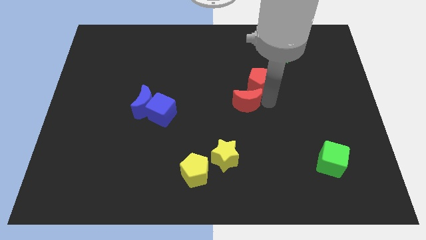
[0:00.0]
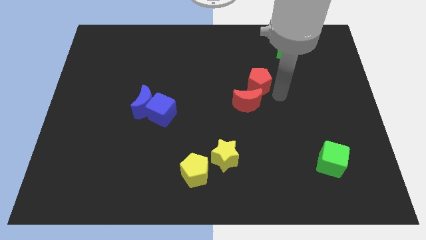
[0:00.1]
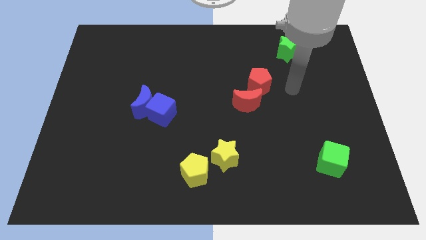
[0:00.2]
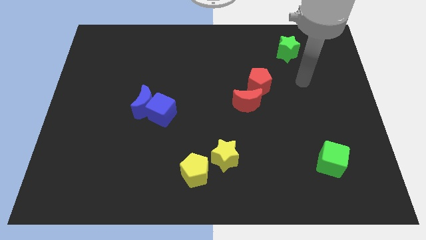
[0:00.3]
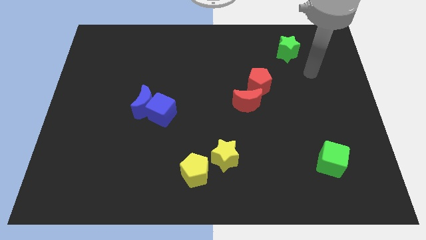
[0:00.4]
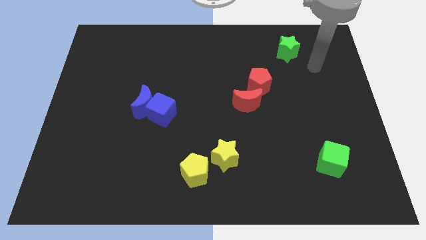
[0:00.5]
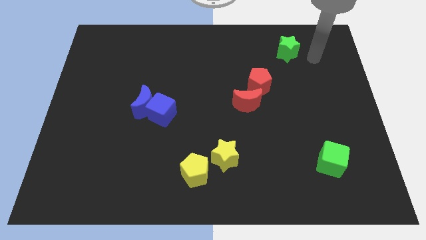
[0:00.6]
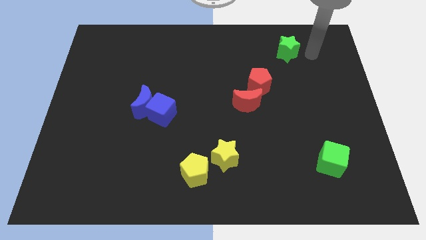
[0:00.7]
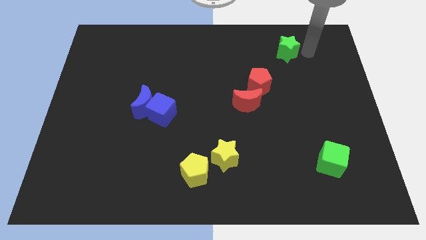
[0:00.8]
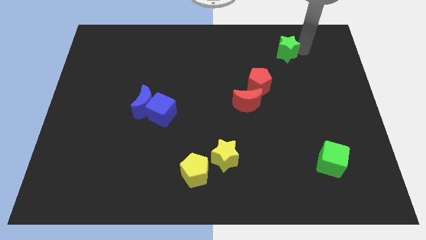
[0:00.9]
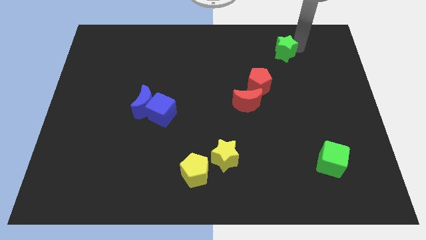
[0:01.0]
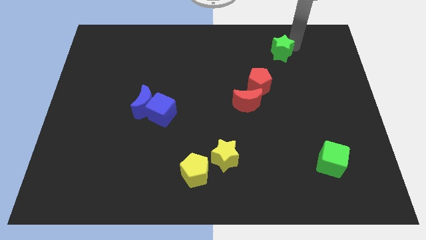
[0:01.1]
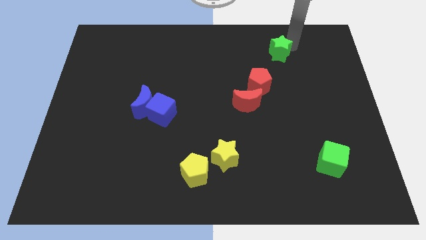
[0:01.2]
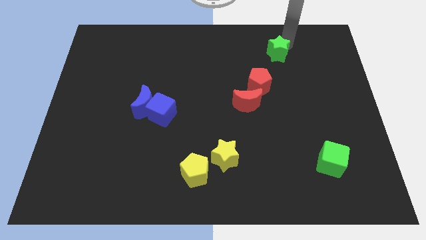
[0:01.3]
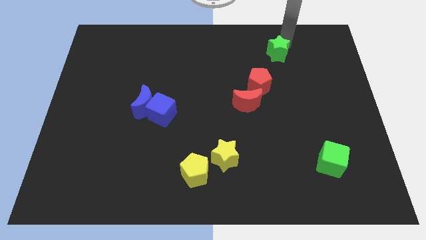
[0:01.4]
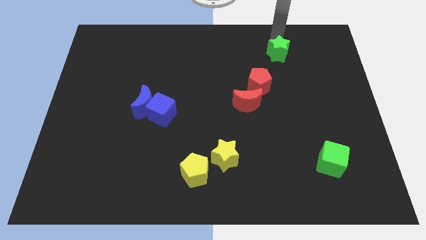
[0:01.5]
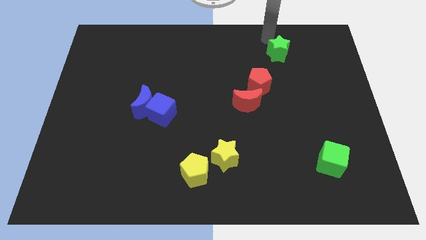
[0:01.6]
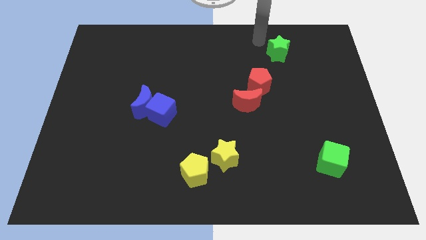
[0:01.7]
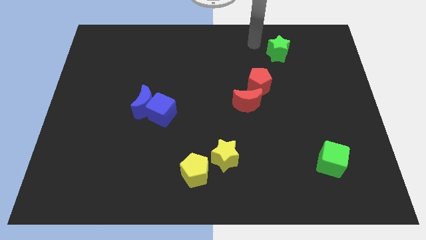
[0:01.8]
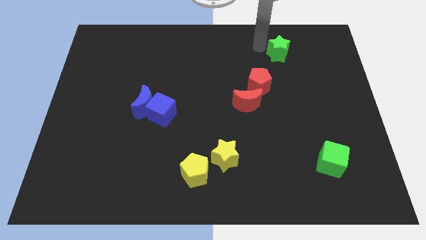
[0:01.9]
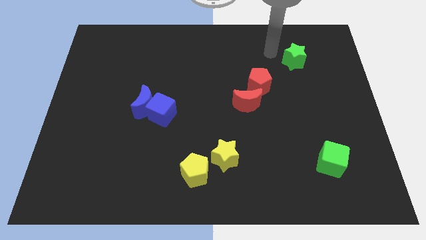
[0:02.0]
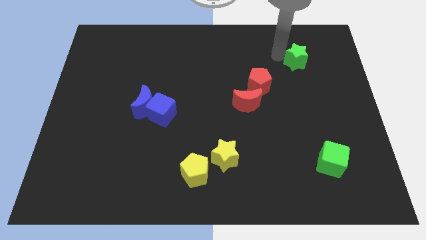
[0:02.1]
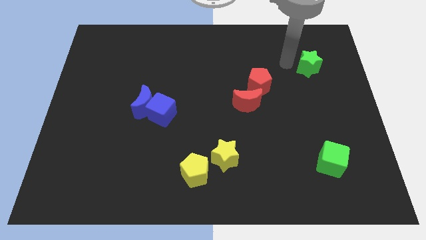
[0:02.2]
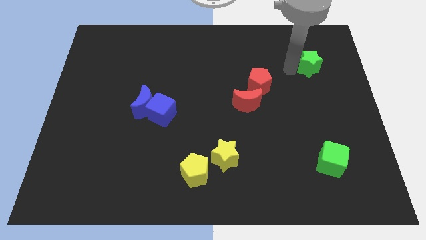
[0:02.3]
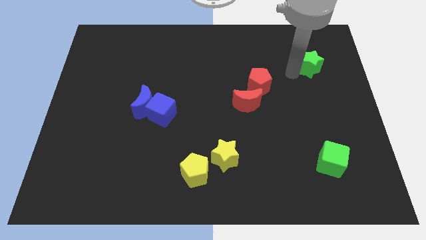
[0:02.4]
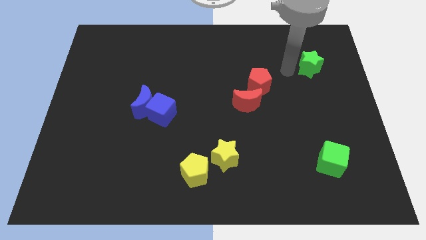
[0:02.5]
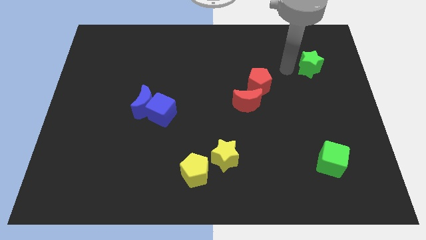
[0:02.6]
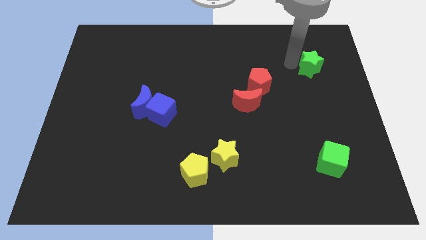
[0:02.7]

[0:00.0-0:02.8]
place the green star to the center right

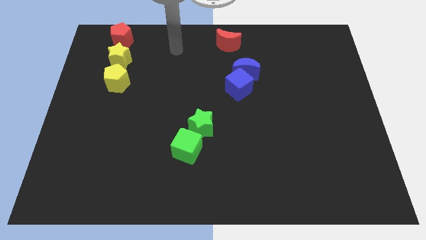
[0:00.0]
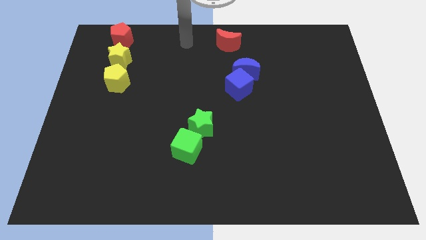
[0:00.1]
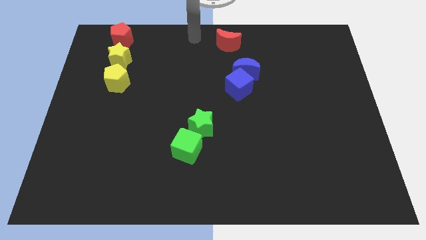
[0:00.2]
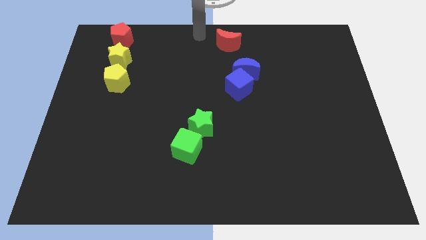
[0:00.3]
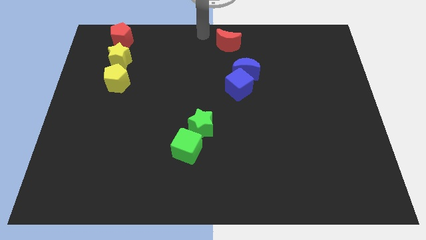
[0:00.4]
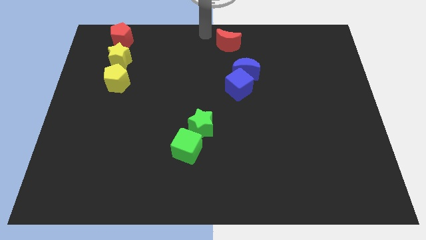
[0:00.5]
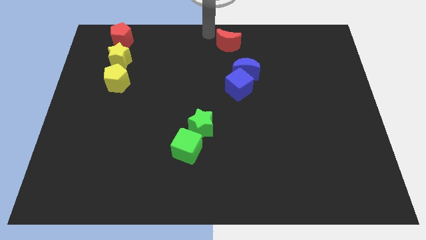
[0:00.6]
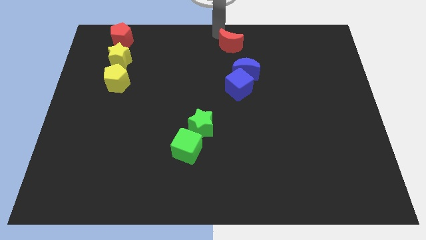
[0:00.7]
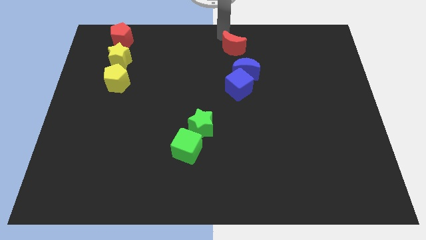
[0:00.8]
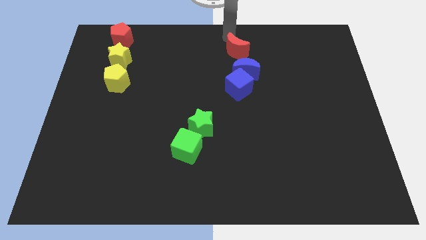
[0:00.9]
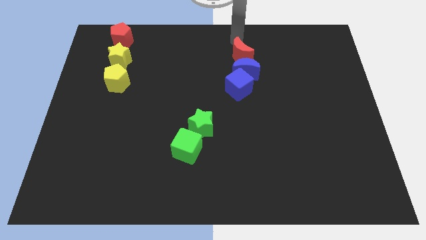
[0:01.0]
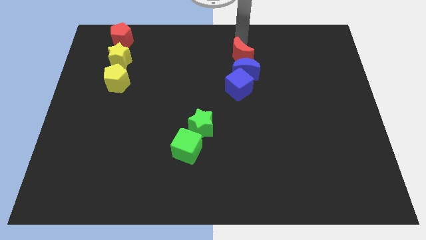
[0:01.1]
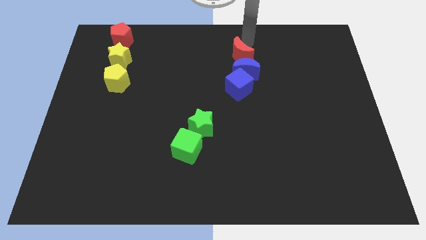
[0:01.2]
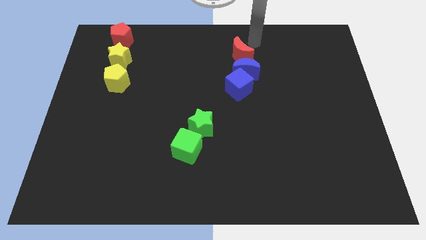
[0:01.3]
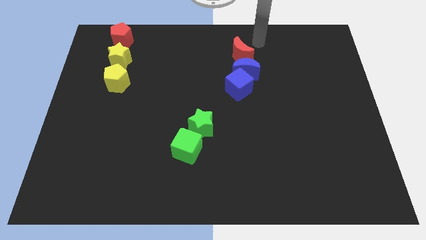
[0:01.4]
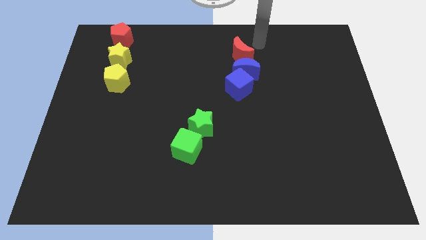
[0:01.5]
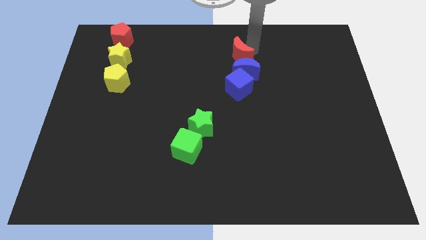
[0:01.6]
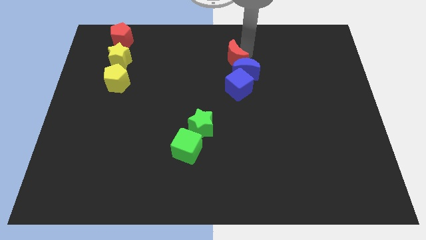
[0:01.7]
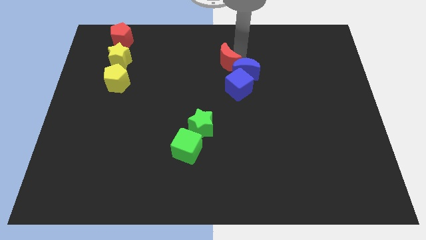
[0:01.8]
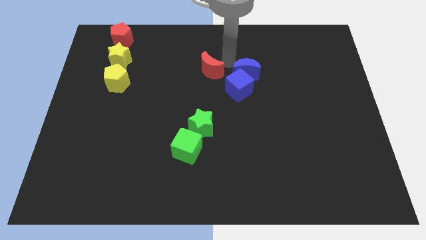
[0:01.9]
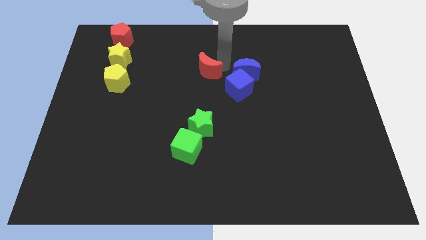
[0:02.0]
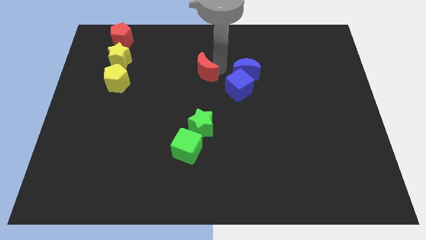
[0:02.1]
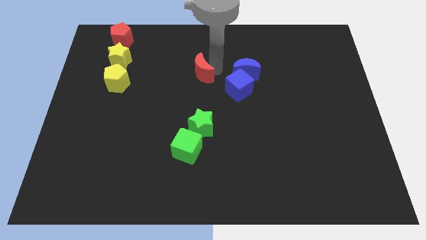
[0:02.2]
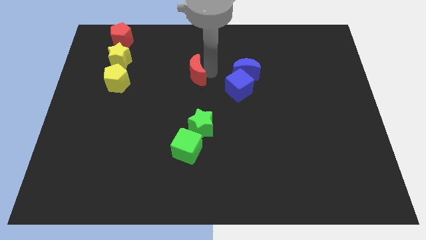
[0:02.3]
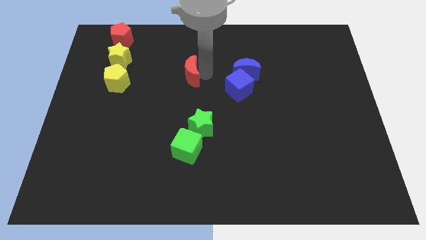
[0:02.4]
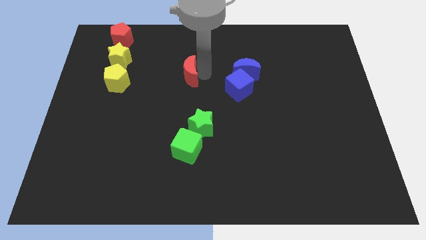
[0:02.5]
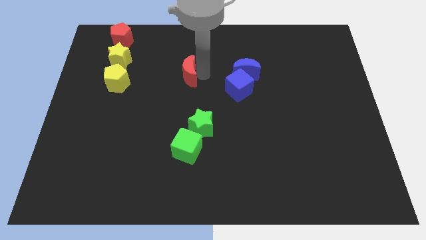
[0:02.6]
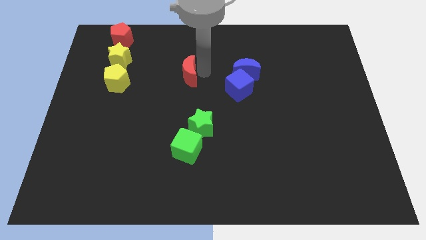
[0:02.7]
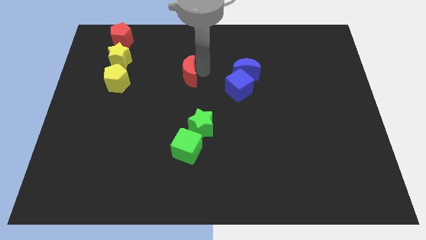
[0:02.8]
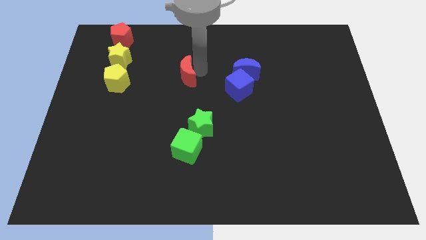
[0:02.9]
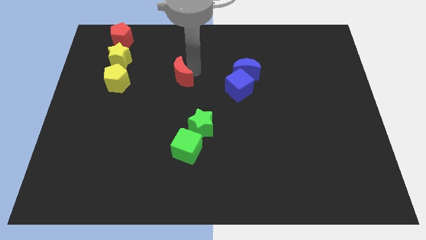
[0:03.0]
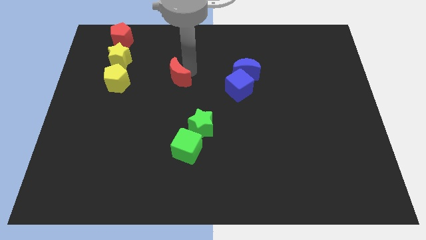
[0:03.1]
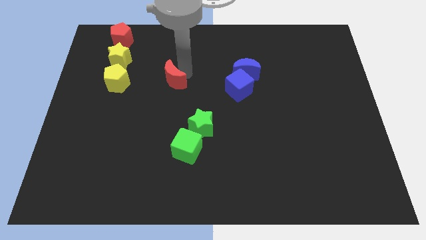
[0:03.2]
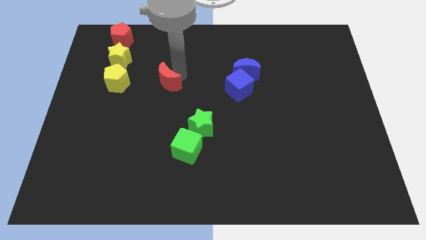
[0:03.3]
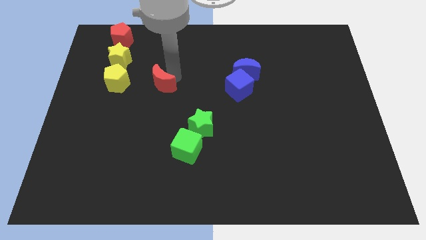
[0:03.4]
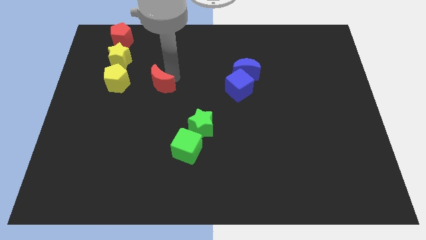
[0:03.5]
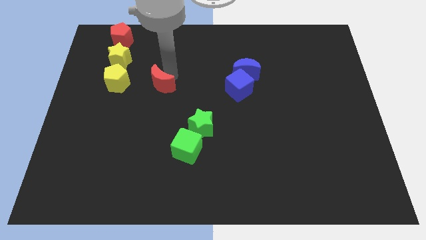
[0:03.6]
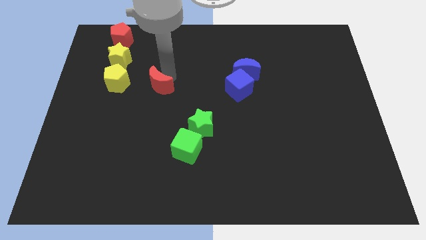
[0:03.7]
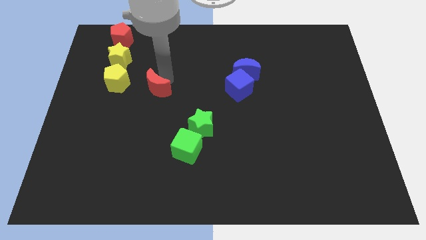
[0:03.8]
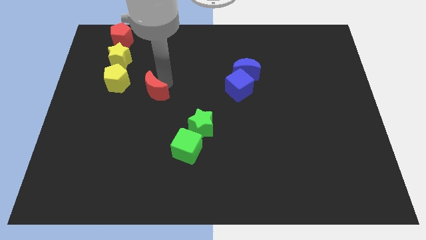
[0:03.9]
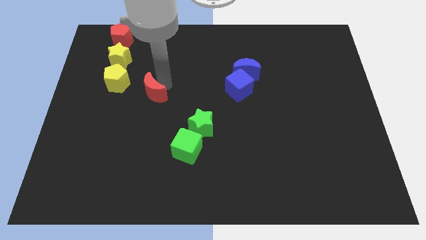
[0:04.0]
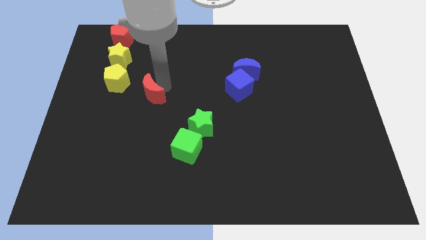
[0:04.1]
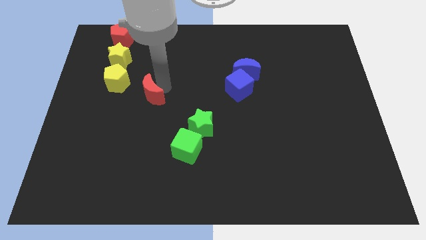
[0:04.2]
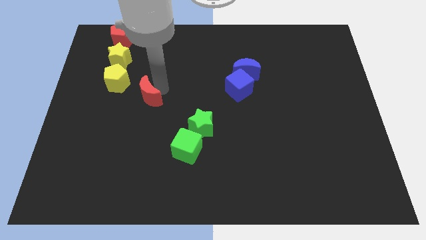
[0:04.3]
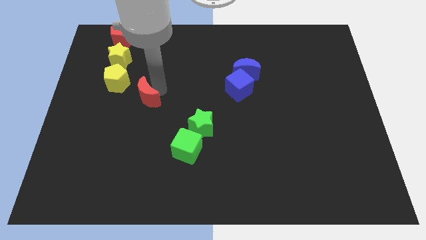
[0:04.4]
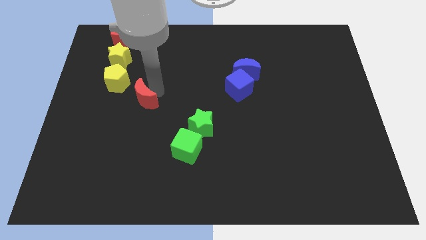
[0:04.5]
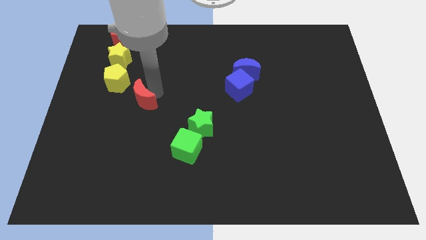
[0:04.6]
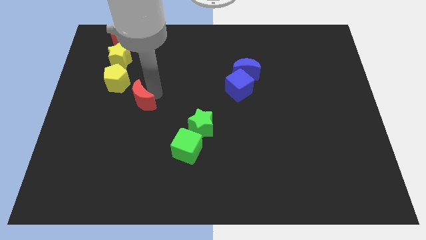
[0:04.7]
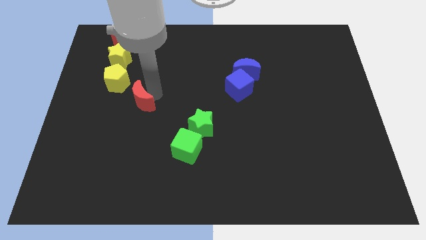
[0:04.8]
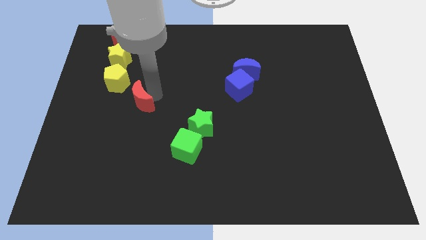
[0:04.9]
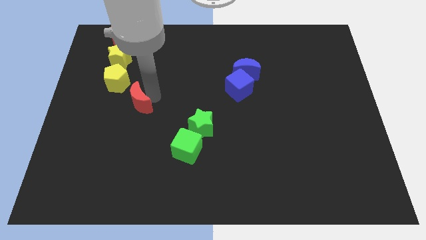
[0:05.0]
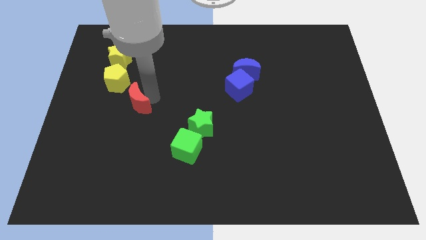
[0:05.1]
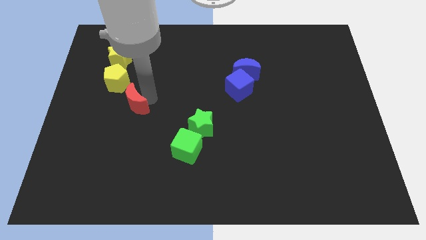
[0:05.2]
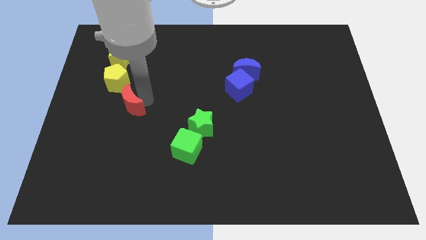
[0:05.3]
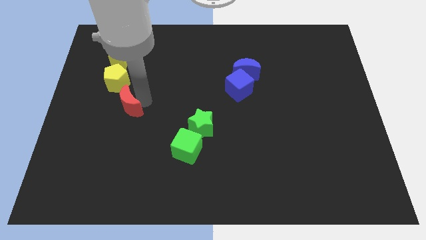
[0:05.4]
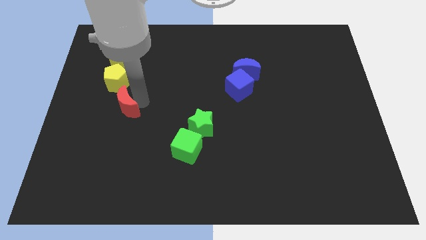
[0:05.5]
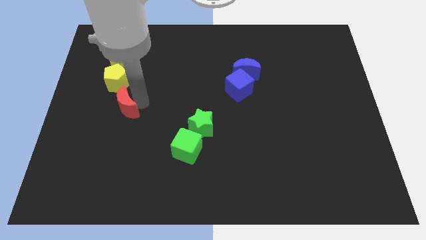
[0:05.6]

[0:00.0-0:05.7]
place the red moon in between the yellow pentagon and green cube

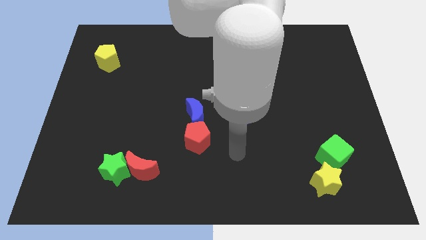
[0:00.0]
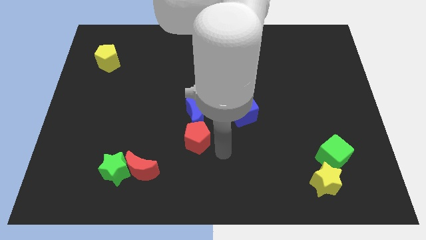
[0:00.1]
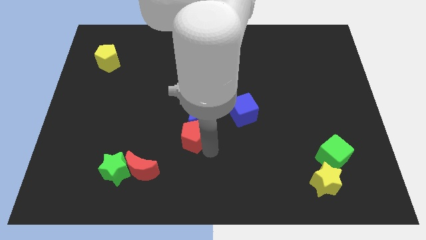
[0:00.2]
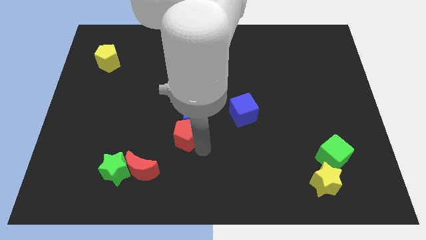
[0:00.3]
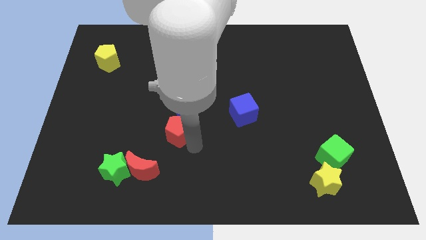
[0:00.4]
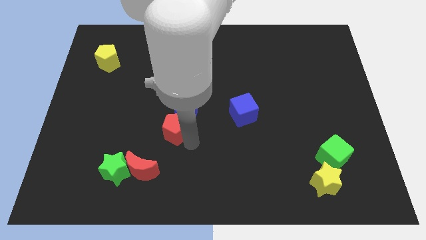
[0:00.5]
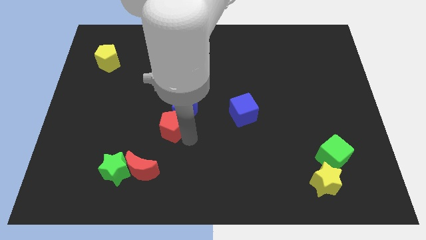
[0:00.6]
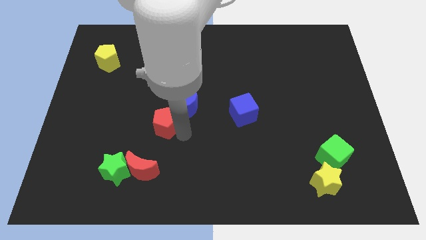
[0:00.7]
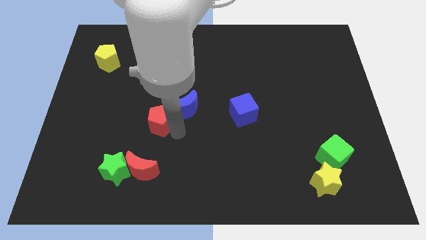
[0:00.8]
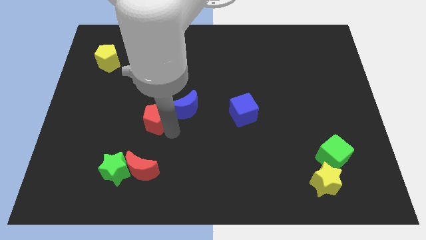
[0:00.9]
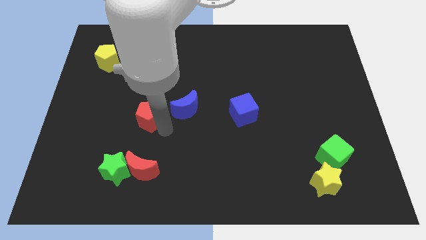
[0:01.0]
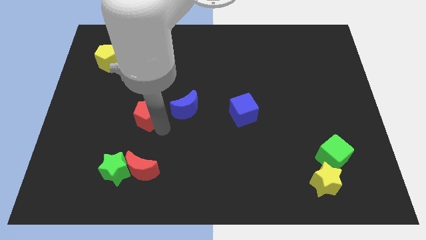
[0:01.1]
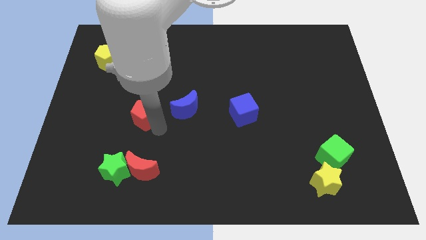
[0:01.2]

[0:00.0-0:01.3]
separate the red pentagon from the bottom of the blue moon
